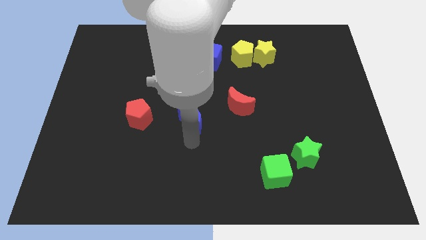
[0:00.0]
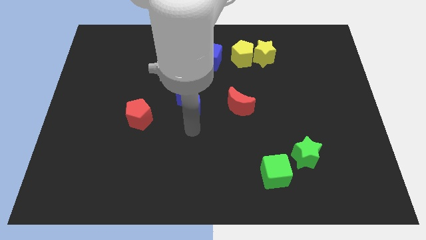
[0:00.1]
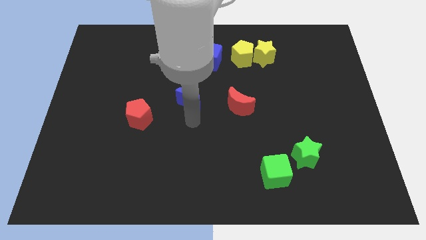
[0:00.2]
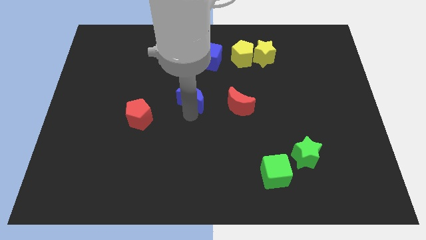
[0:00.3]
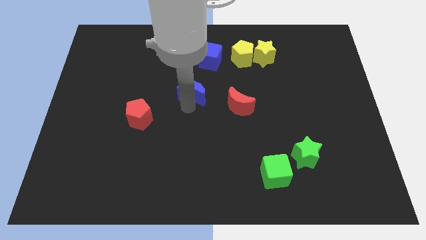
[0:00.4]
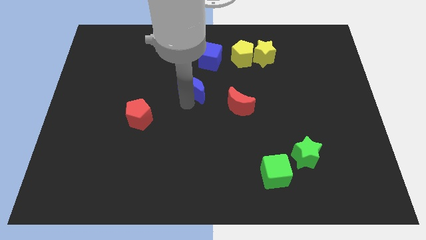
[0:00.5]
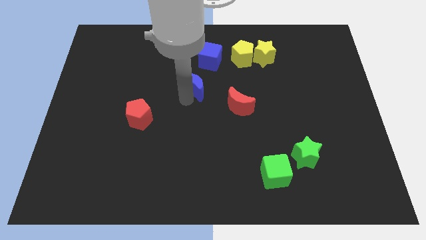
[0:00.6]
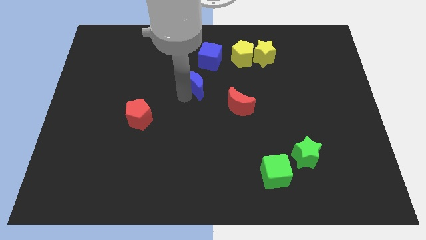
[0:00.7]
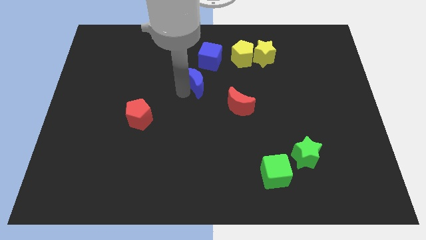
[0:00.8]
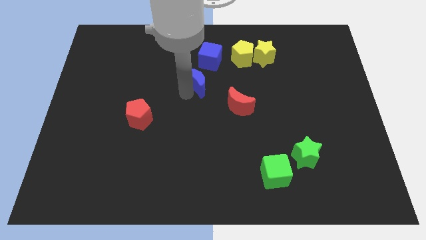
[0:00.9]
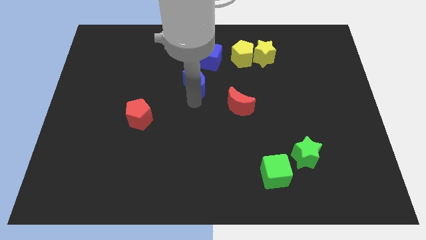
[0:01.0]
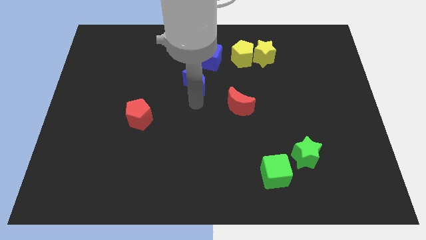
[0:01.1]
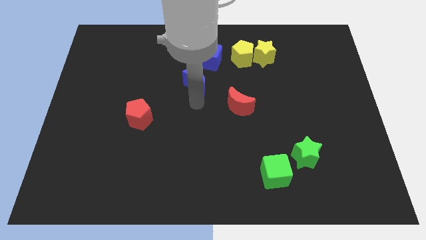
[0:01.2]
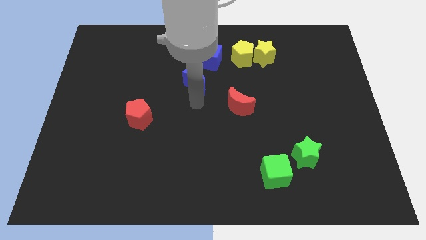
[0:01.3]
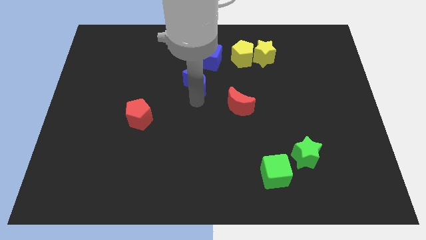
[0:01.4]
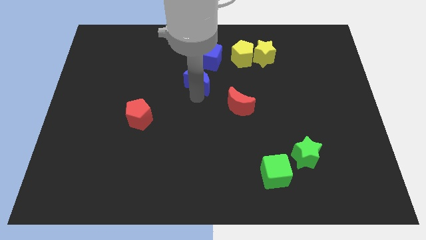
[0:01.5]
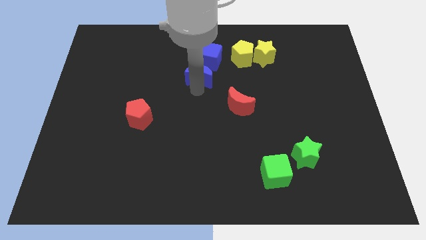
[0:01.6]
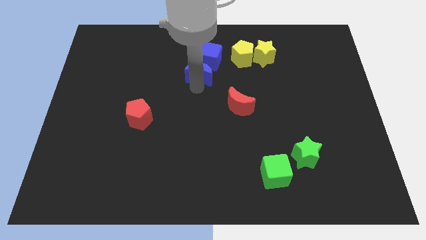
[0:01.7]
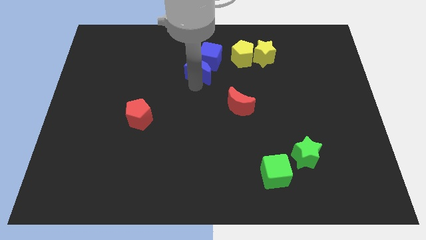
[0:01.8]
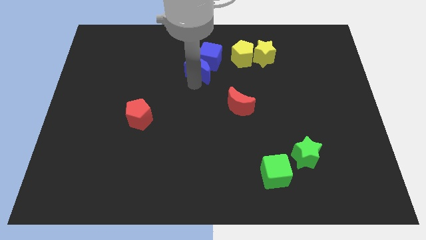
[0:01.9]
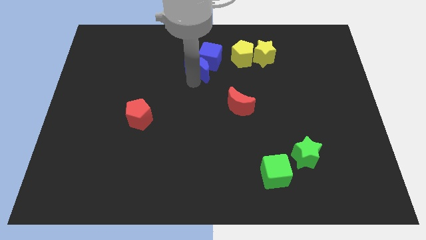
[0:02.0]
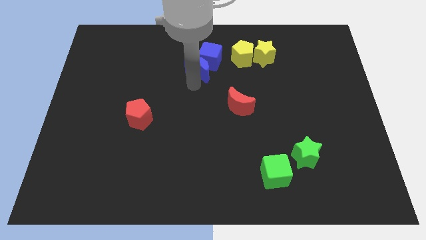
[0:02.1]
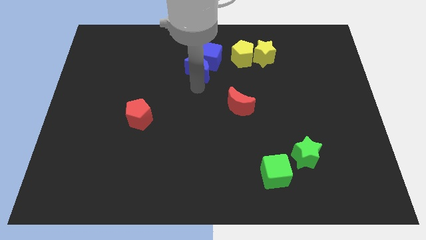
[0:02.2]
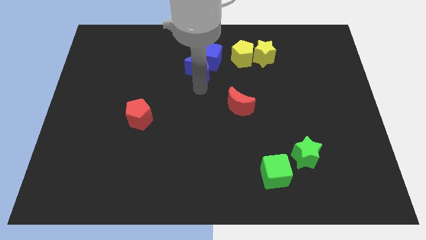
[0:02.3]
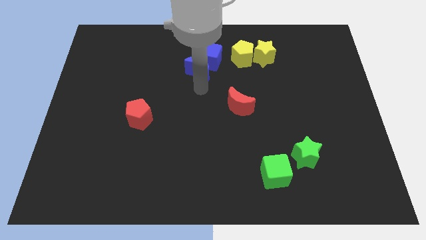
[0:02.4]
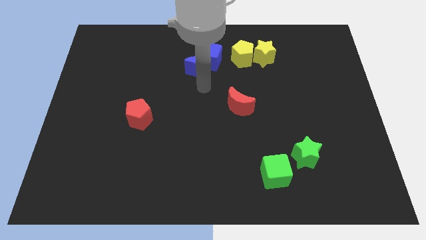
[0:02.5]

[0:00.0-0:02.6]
move the blue moon close to the blue cube

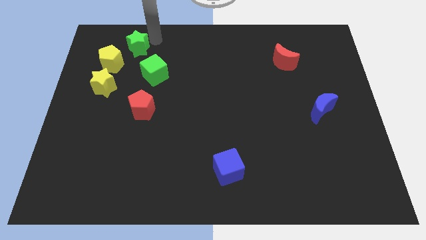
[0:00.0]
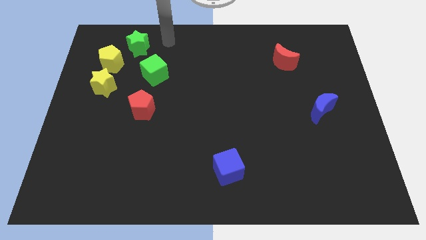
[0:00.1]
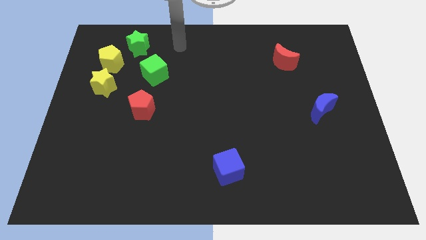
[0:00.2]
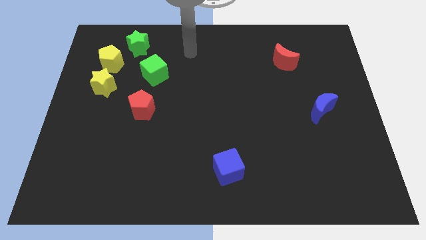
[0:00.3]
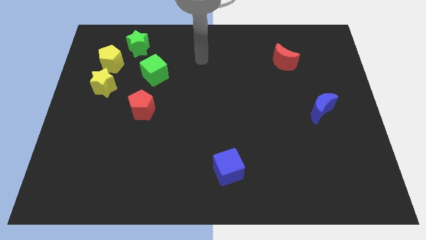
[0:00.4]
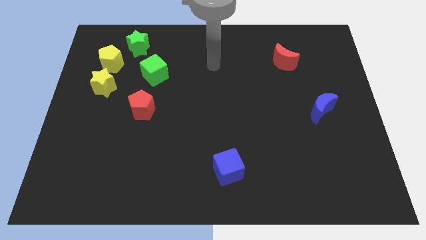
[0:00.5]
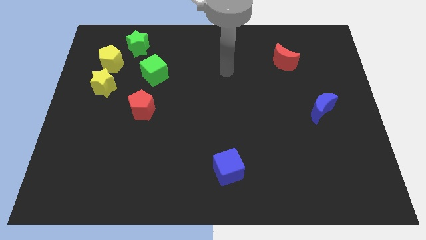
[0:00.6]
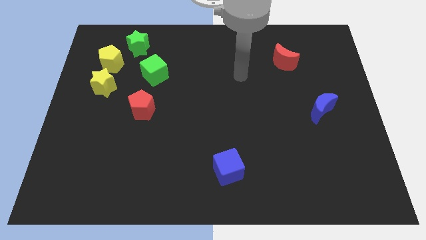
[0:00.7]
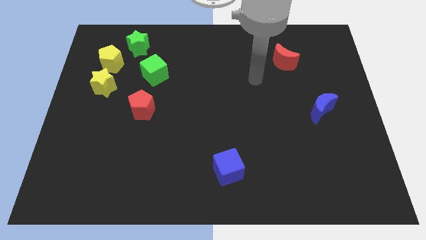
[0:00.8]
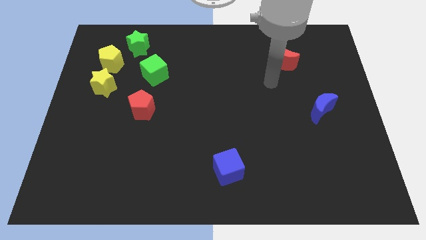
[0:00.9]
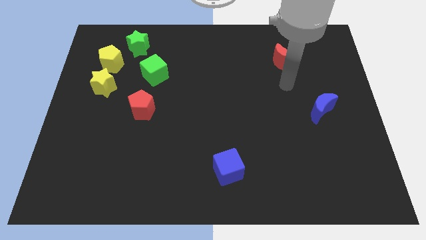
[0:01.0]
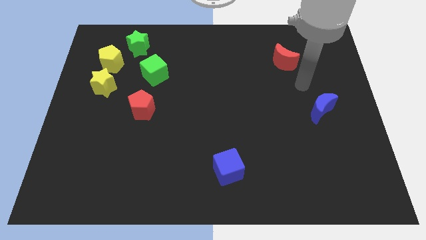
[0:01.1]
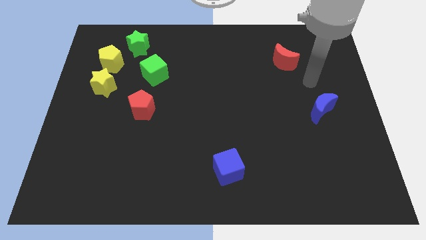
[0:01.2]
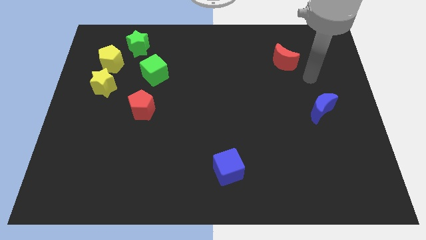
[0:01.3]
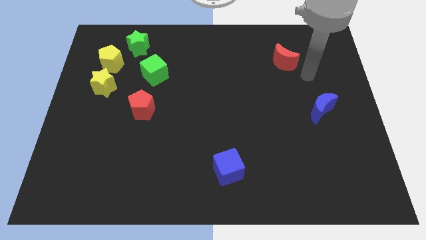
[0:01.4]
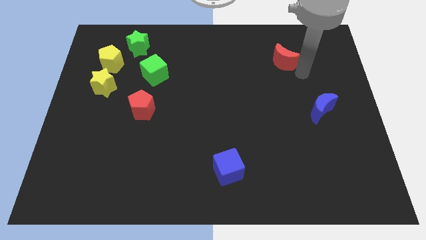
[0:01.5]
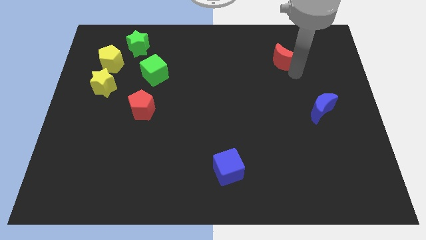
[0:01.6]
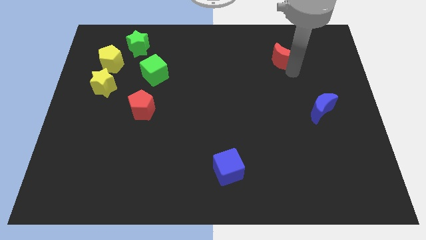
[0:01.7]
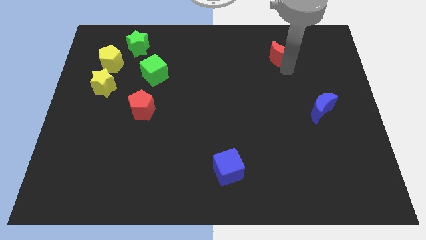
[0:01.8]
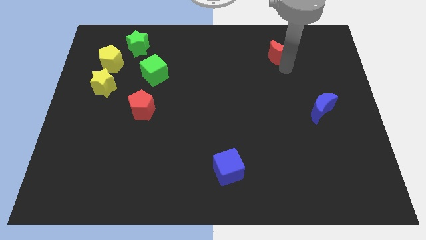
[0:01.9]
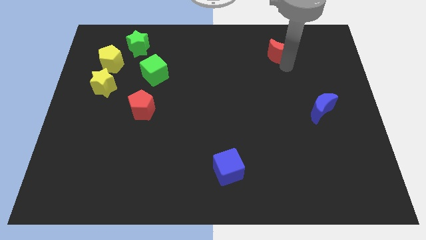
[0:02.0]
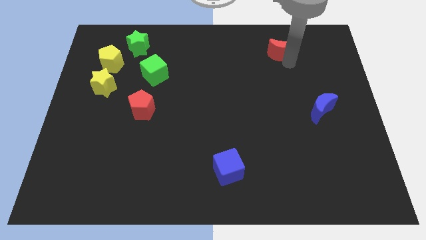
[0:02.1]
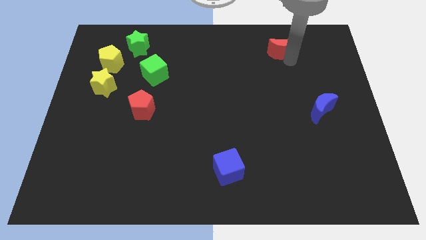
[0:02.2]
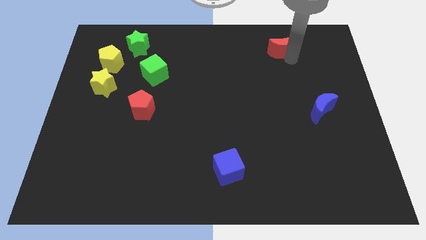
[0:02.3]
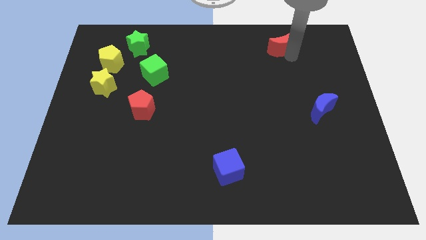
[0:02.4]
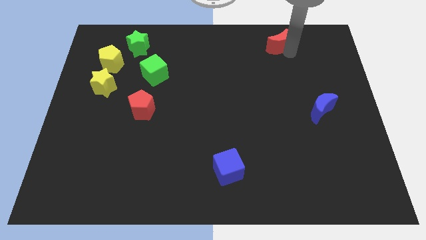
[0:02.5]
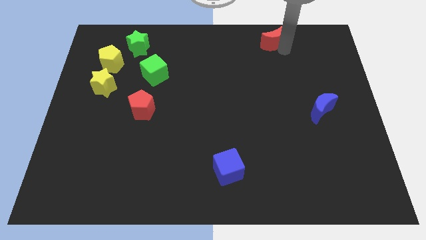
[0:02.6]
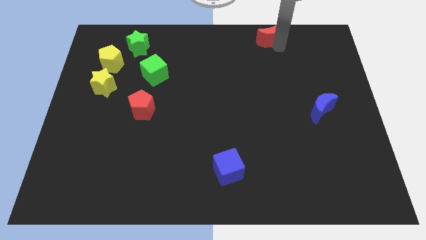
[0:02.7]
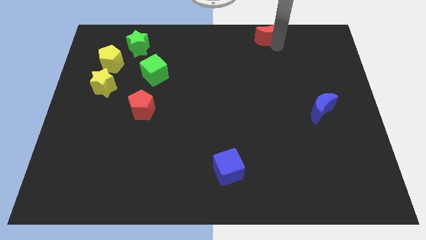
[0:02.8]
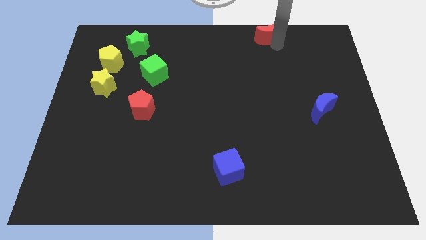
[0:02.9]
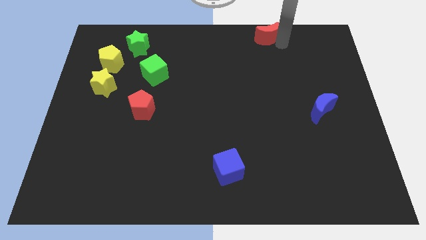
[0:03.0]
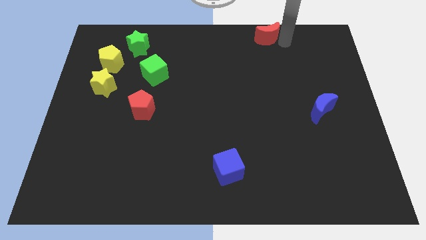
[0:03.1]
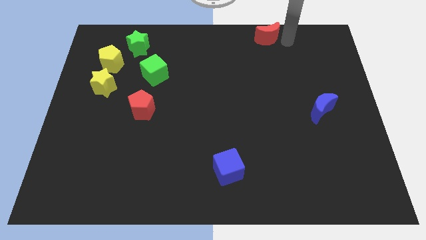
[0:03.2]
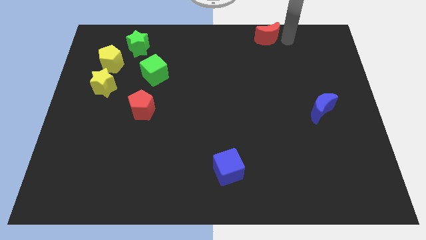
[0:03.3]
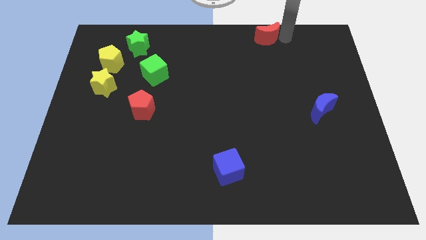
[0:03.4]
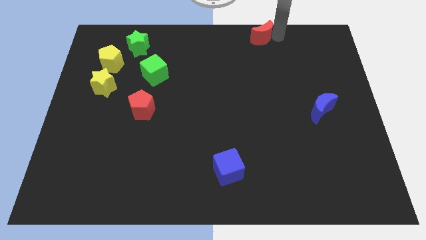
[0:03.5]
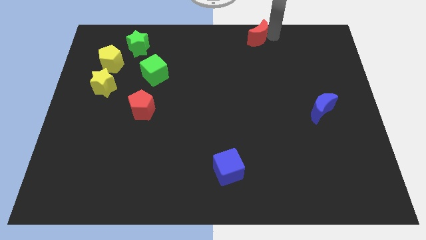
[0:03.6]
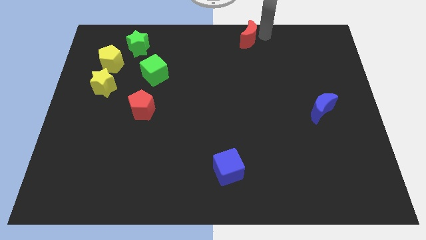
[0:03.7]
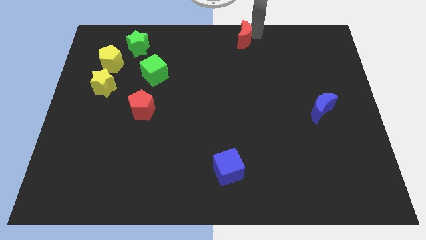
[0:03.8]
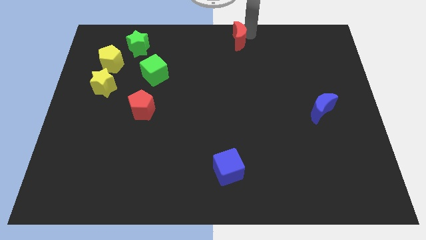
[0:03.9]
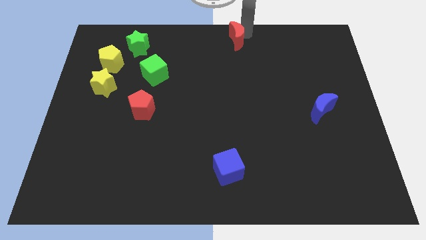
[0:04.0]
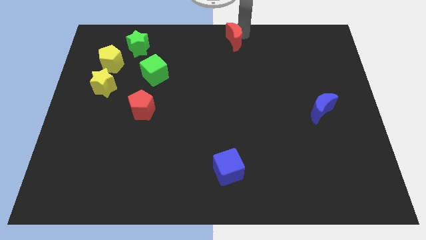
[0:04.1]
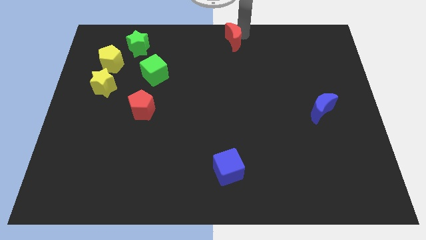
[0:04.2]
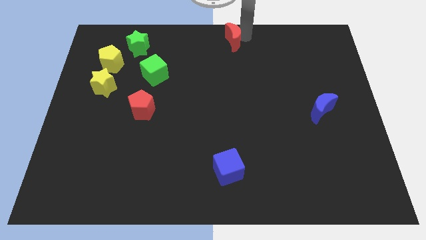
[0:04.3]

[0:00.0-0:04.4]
move the red crescent to the top center of the board

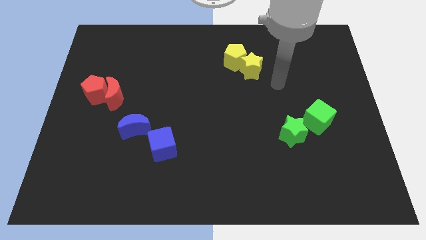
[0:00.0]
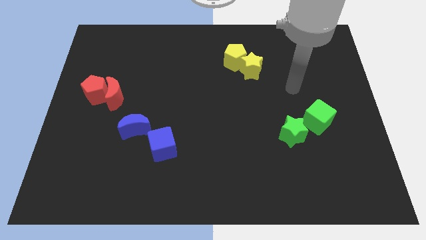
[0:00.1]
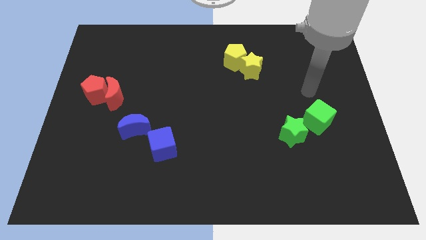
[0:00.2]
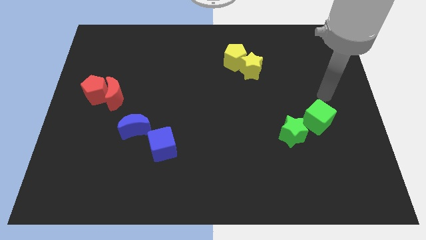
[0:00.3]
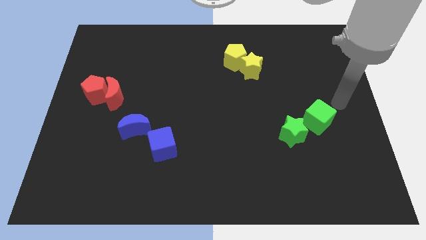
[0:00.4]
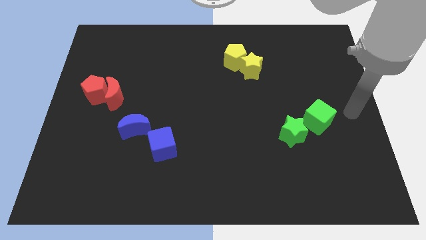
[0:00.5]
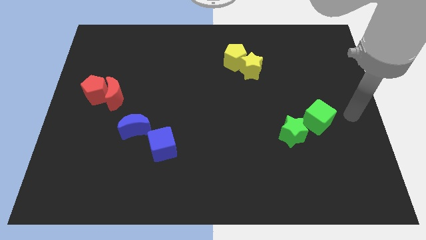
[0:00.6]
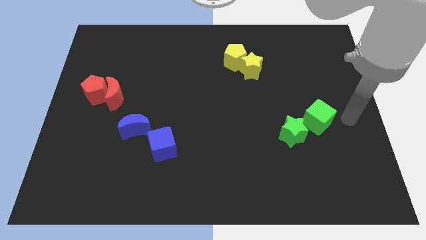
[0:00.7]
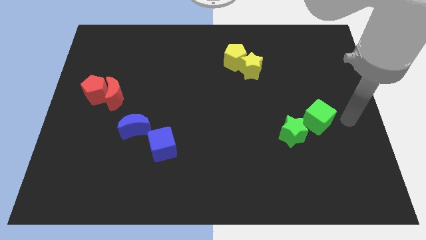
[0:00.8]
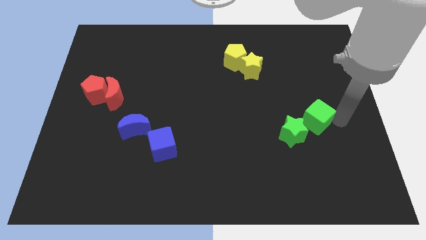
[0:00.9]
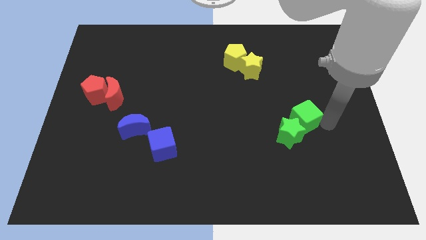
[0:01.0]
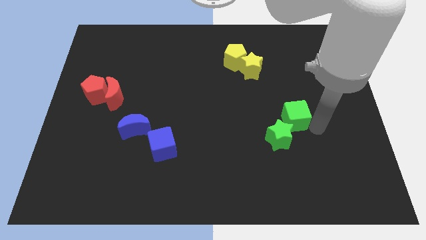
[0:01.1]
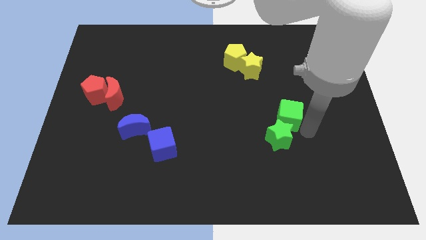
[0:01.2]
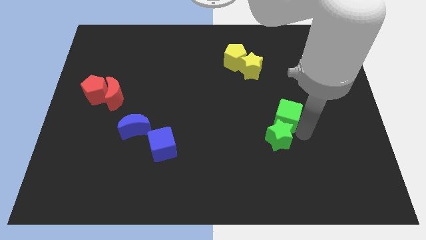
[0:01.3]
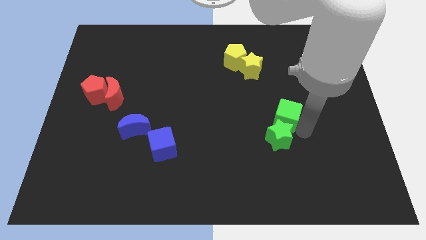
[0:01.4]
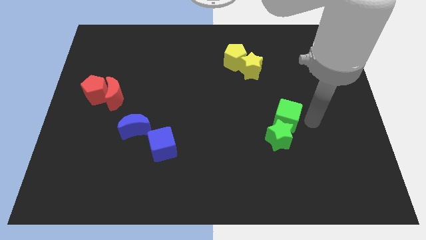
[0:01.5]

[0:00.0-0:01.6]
push the green blocks slightly to the left

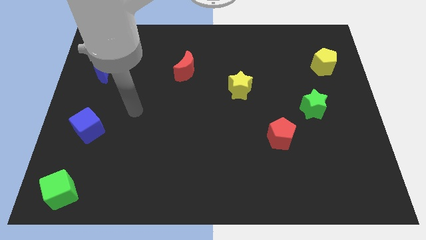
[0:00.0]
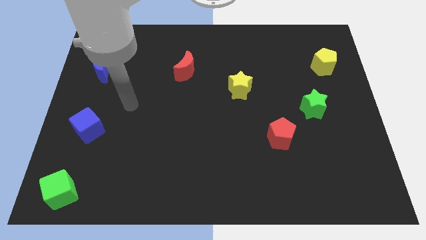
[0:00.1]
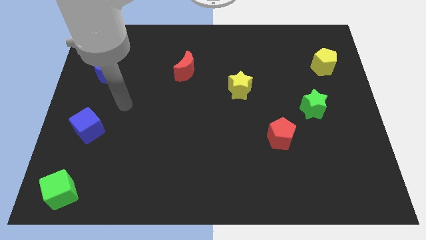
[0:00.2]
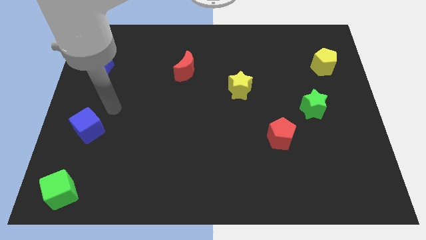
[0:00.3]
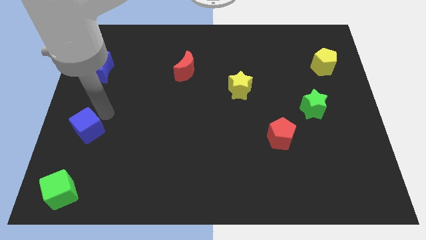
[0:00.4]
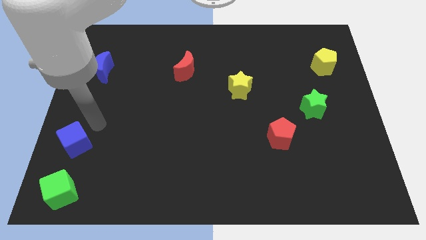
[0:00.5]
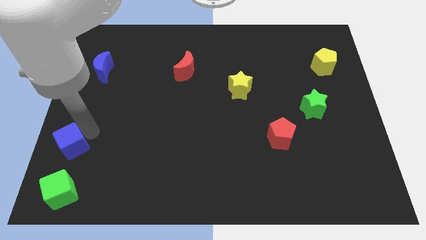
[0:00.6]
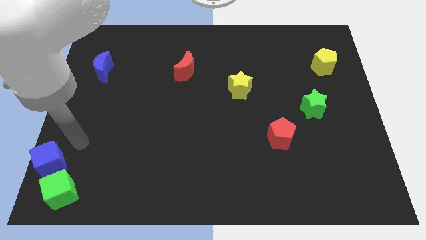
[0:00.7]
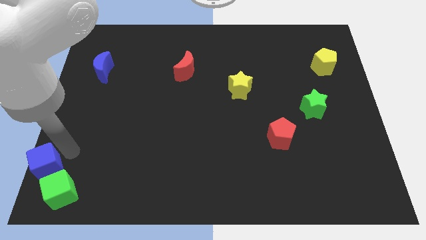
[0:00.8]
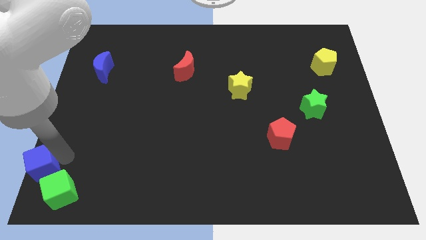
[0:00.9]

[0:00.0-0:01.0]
place the blue cube diagonally top left to the green cube
